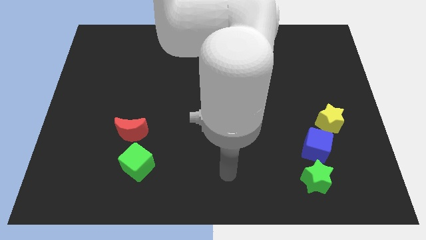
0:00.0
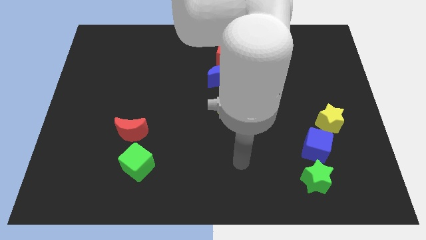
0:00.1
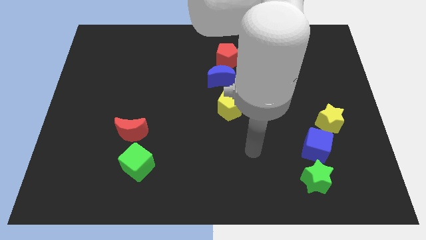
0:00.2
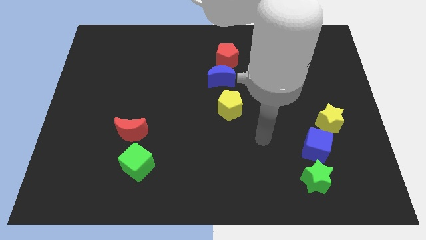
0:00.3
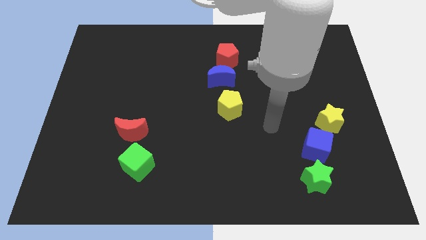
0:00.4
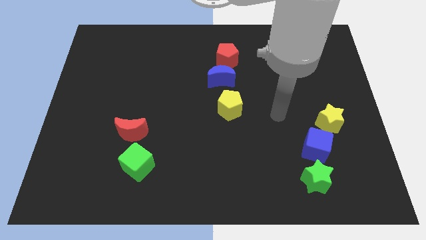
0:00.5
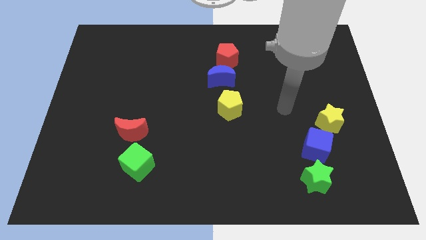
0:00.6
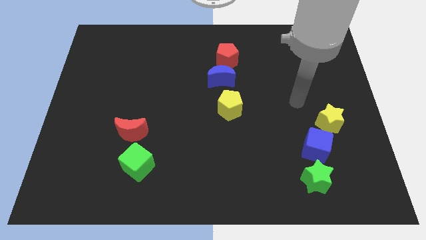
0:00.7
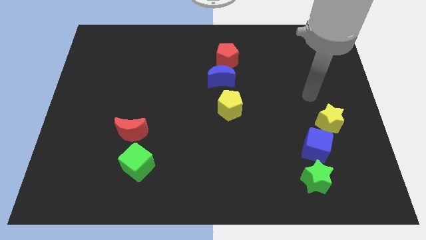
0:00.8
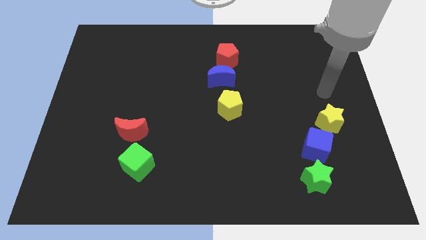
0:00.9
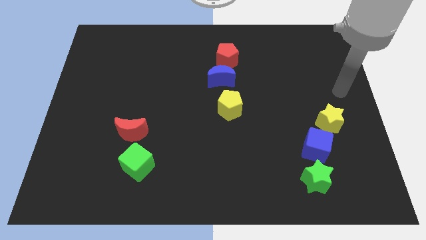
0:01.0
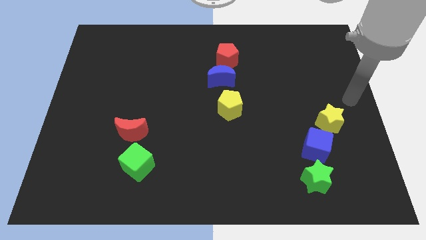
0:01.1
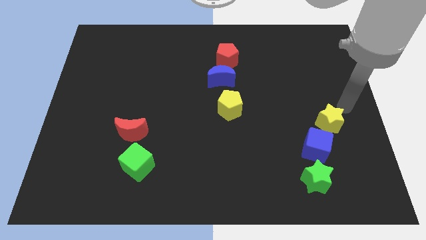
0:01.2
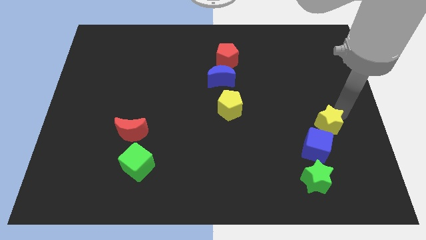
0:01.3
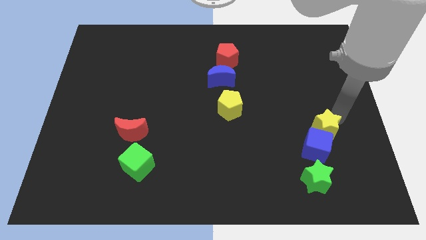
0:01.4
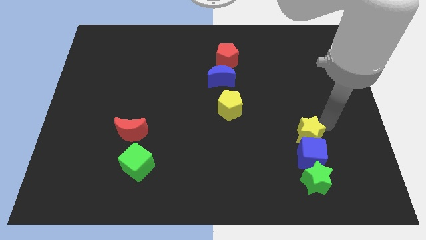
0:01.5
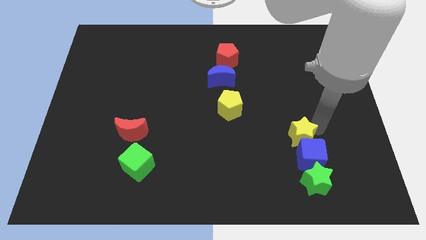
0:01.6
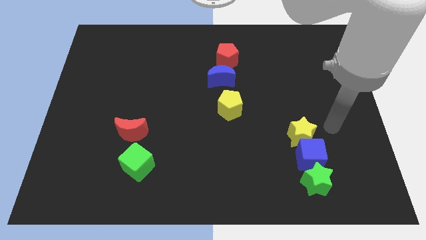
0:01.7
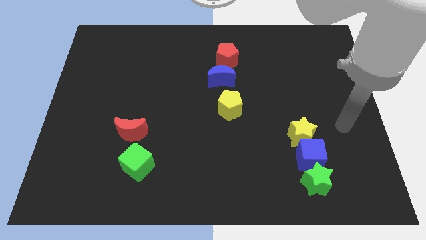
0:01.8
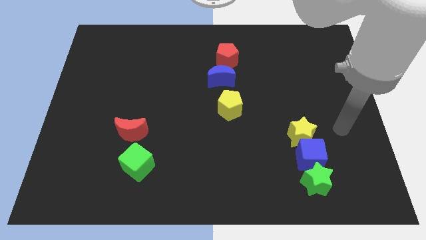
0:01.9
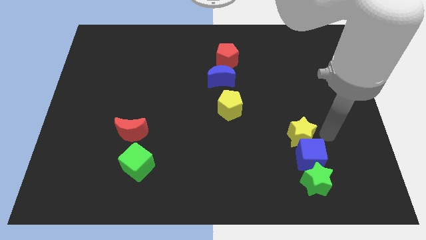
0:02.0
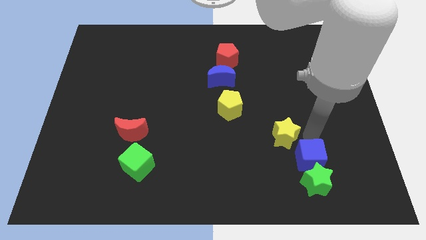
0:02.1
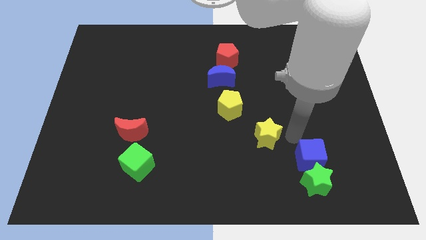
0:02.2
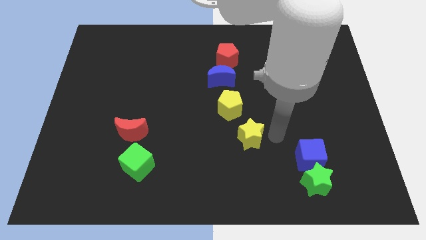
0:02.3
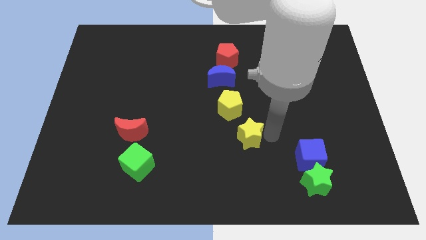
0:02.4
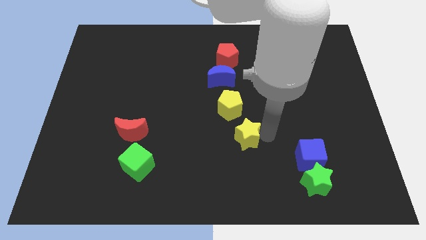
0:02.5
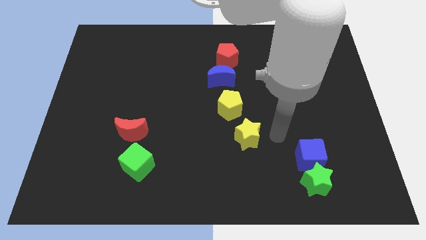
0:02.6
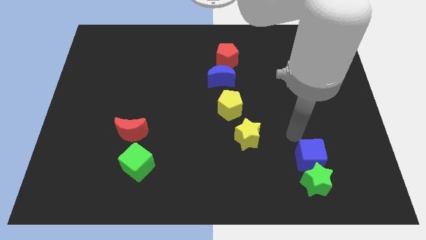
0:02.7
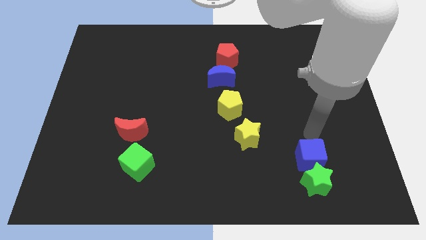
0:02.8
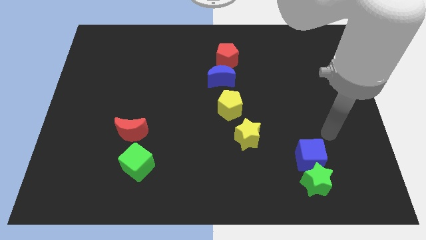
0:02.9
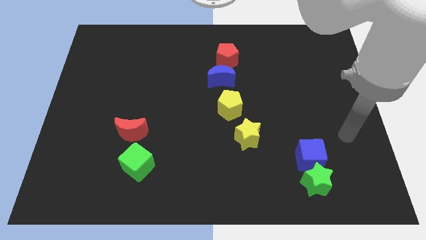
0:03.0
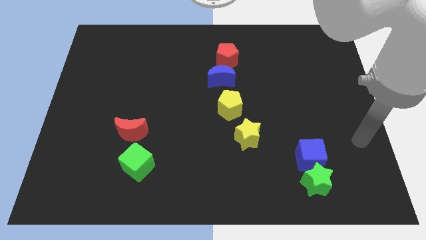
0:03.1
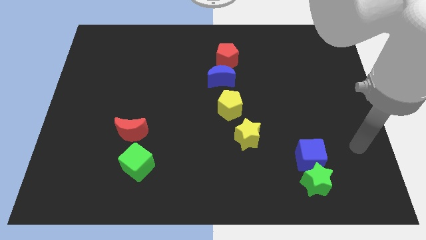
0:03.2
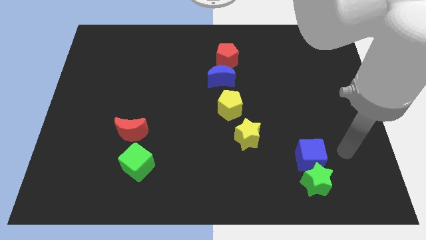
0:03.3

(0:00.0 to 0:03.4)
place the yellow star to the bottom of the yellow pentagon

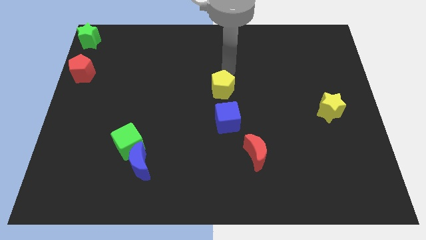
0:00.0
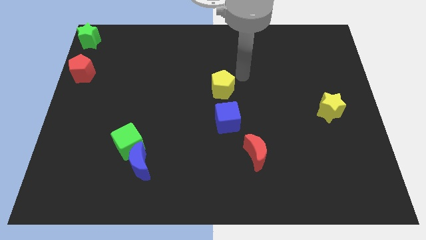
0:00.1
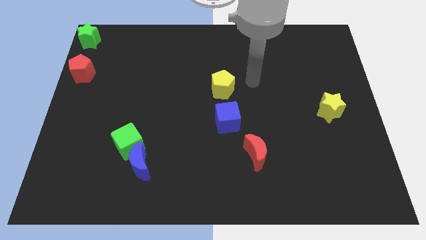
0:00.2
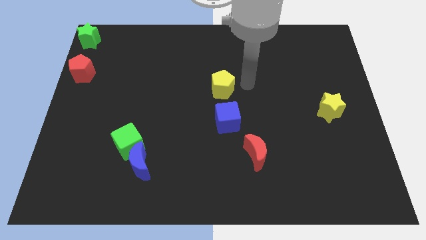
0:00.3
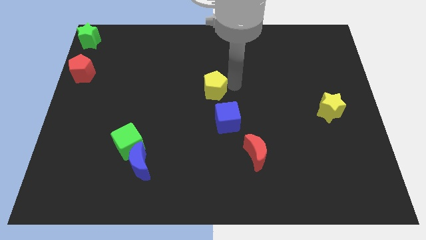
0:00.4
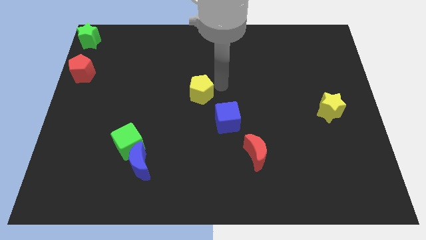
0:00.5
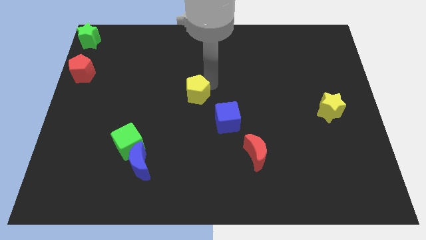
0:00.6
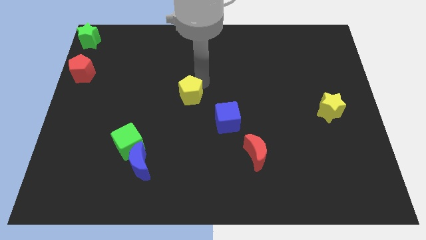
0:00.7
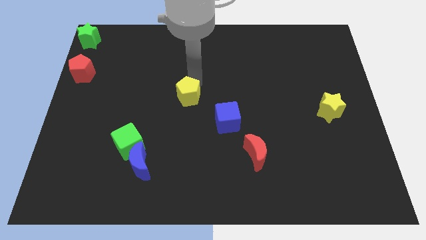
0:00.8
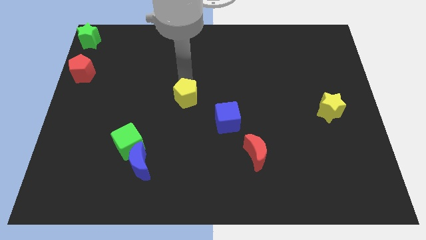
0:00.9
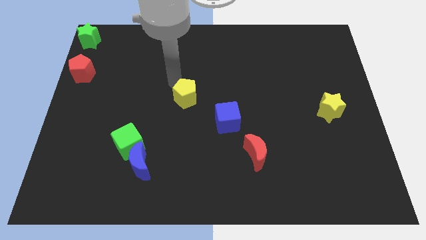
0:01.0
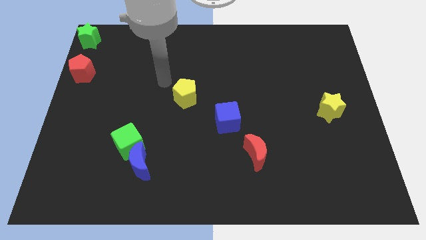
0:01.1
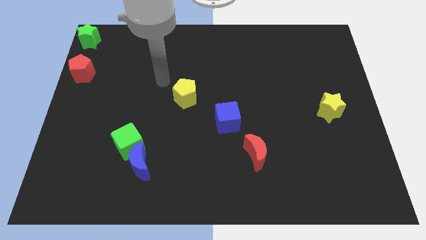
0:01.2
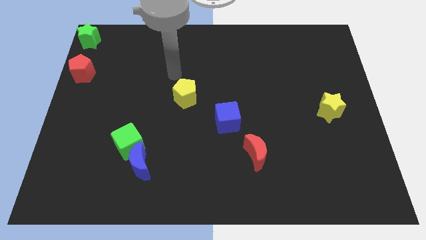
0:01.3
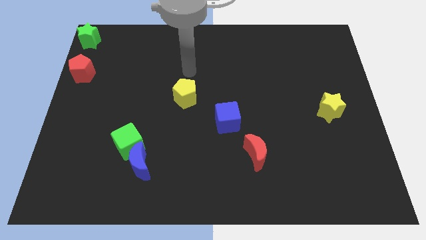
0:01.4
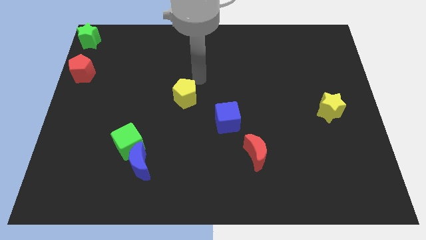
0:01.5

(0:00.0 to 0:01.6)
place the yellow pentagon diagonal to the green star

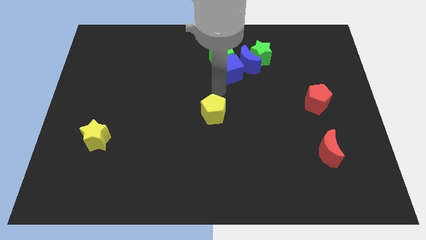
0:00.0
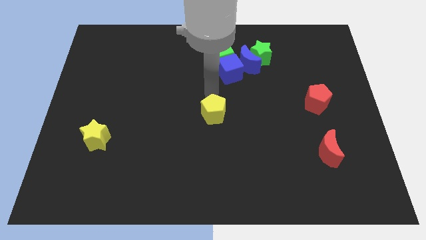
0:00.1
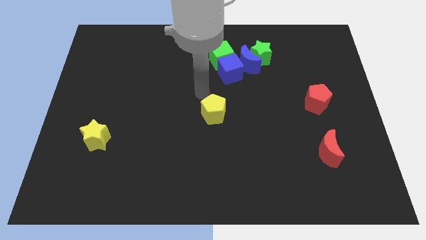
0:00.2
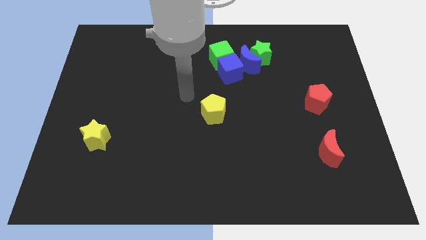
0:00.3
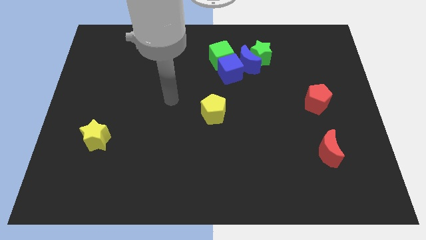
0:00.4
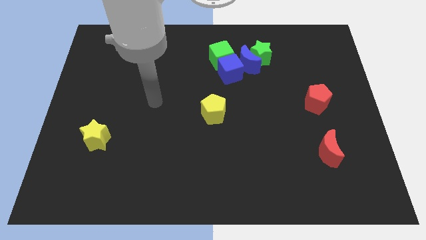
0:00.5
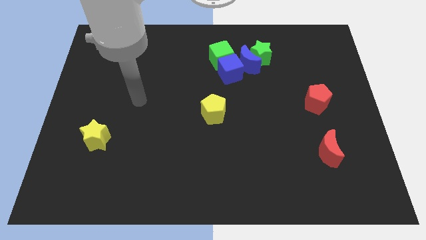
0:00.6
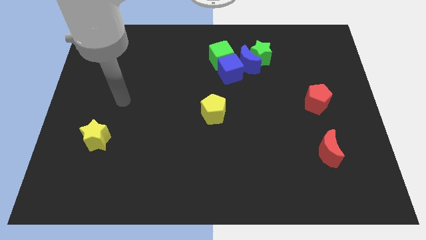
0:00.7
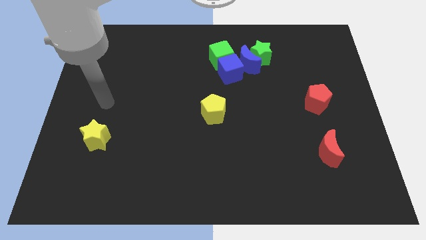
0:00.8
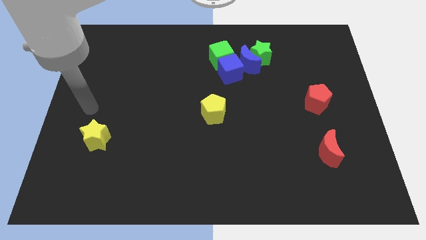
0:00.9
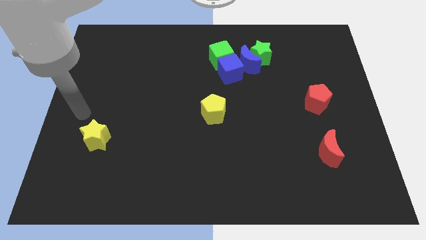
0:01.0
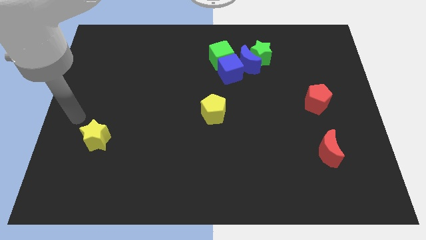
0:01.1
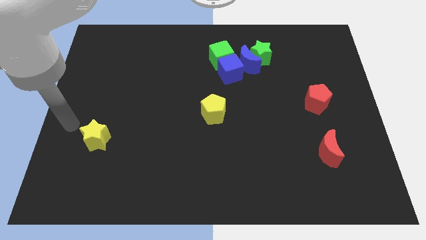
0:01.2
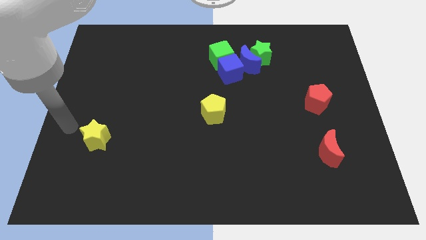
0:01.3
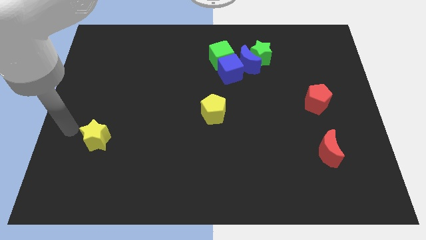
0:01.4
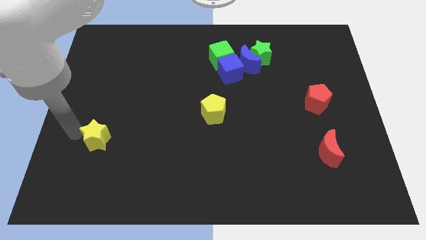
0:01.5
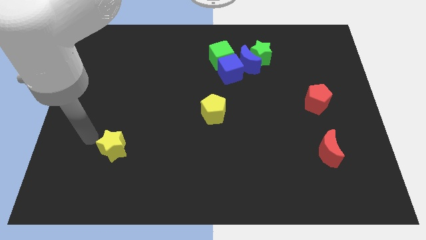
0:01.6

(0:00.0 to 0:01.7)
place the arm to the left of yellow star

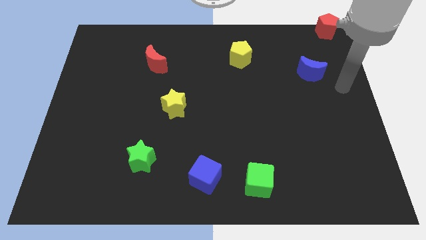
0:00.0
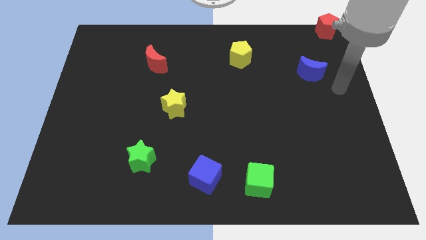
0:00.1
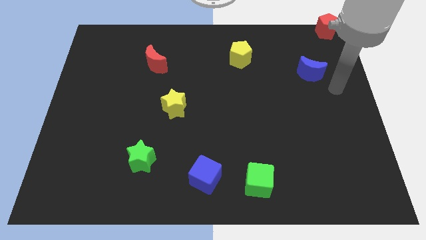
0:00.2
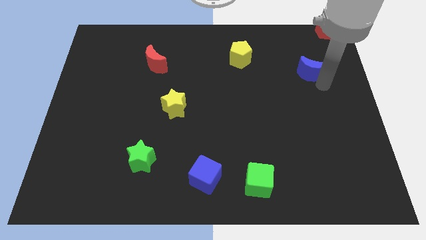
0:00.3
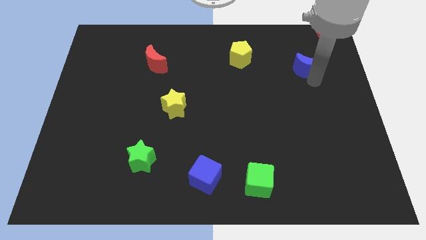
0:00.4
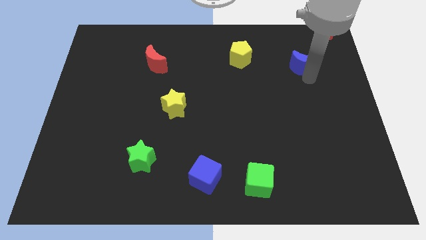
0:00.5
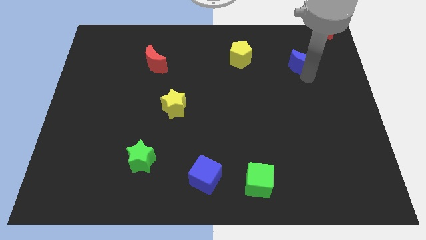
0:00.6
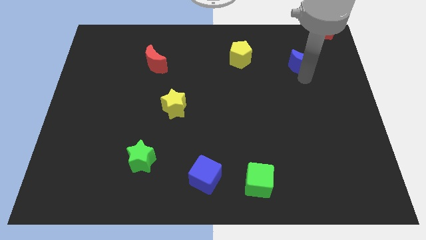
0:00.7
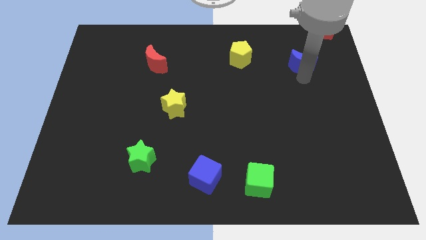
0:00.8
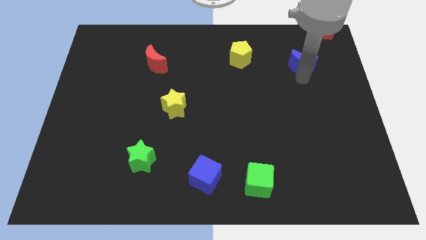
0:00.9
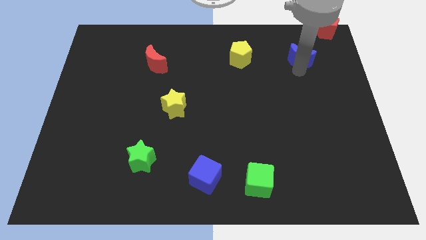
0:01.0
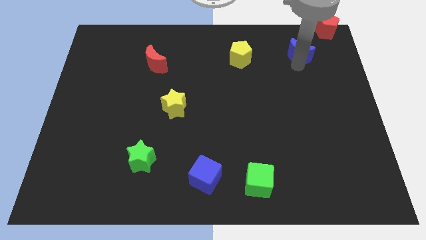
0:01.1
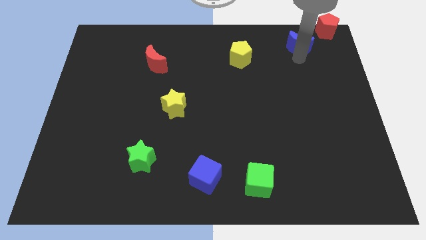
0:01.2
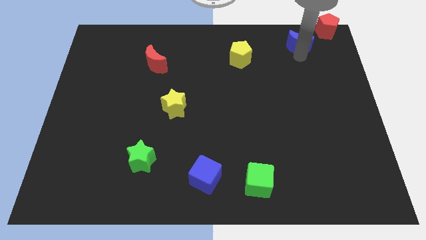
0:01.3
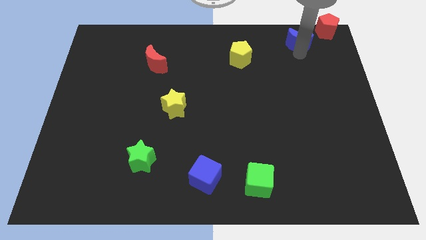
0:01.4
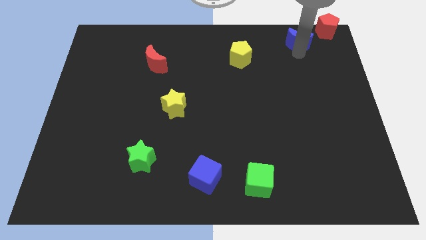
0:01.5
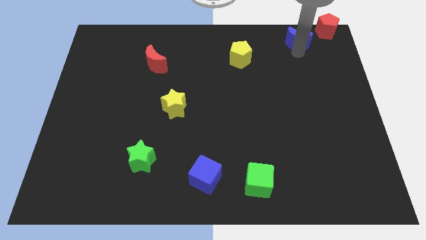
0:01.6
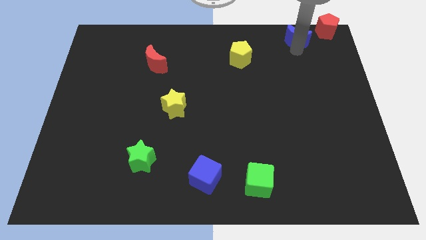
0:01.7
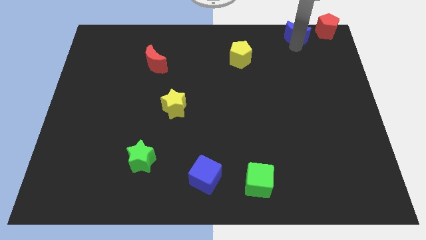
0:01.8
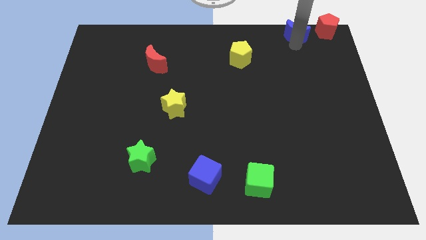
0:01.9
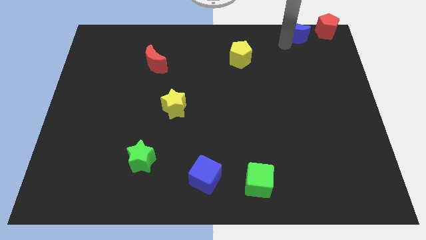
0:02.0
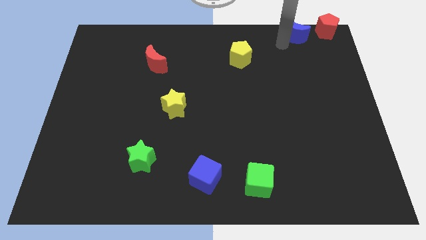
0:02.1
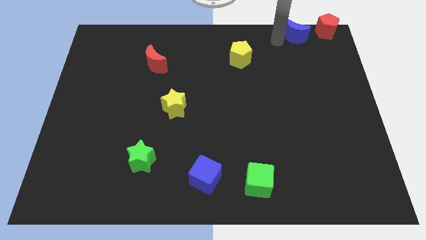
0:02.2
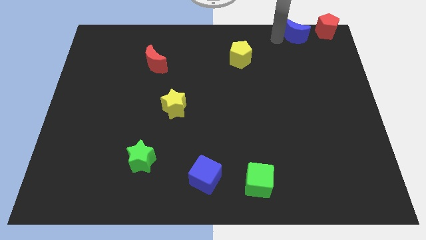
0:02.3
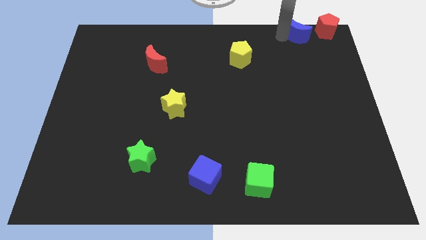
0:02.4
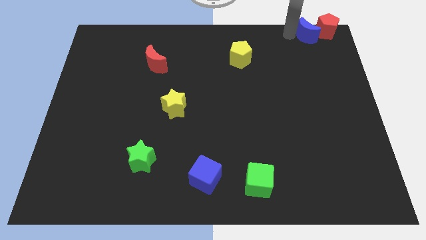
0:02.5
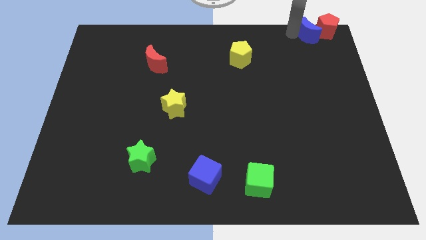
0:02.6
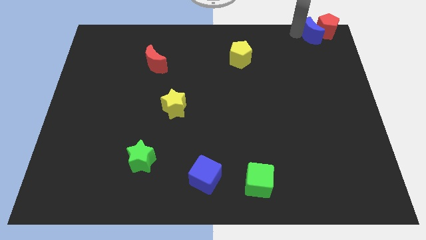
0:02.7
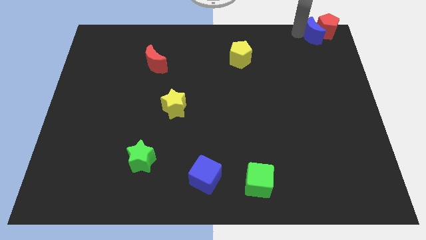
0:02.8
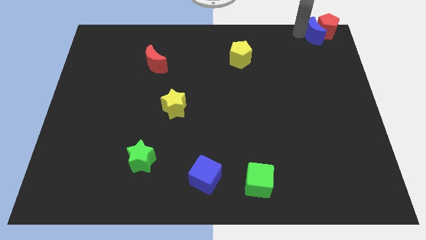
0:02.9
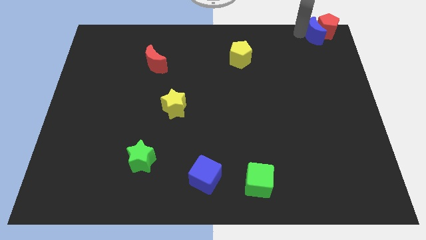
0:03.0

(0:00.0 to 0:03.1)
slide blue moon into red pentagon
